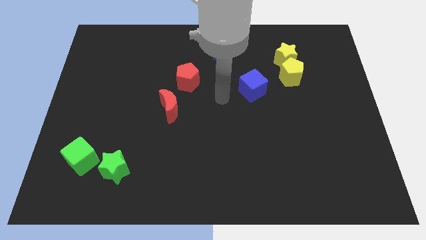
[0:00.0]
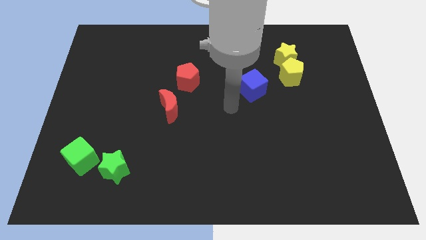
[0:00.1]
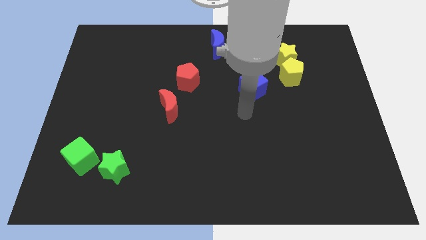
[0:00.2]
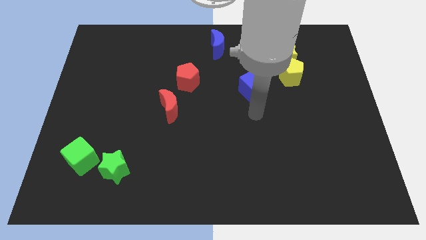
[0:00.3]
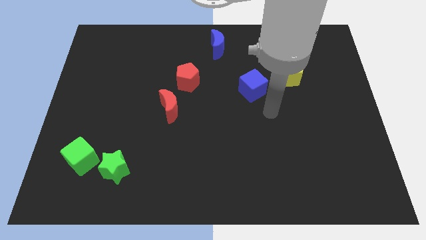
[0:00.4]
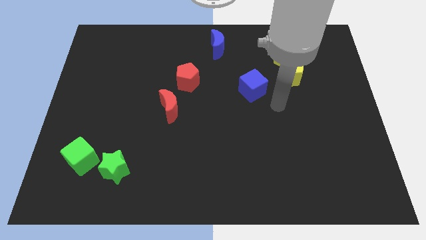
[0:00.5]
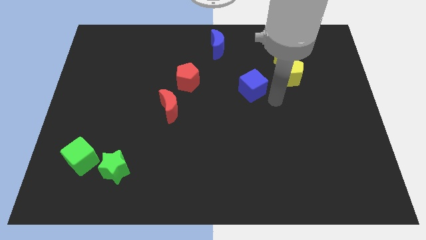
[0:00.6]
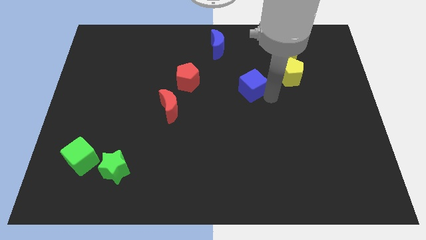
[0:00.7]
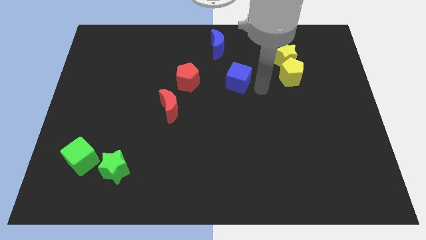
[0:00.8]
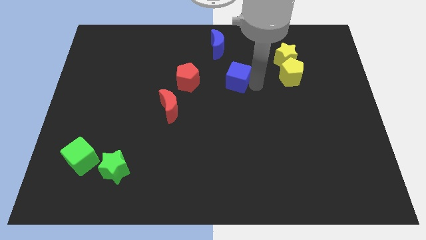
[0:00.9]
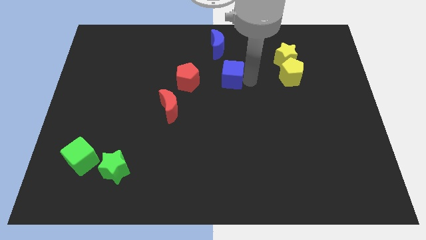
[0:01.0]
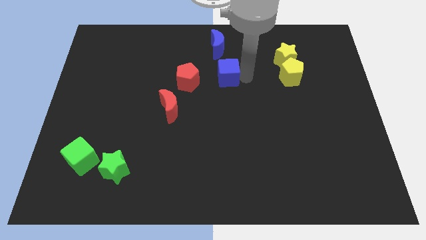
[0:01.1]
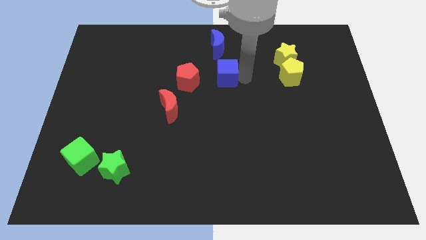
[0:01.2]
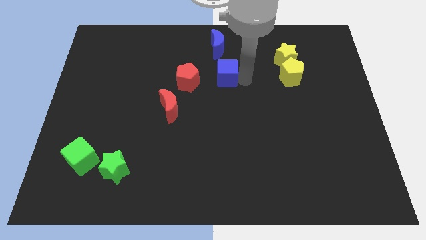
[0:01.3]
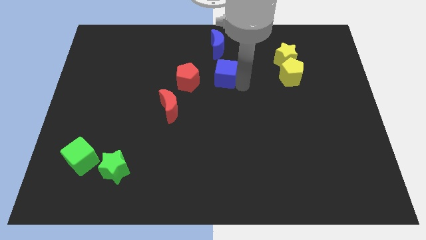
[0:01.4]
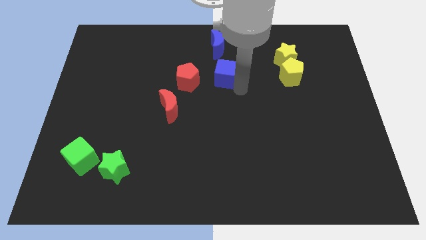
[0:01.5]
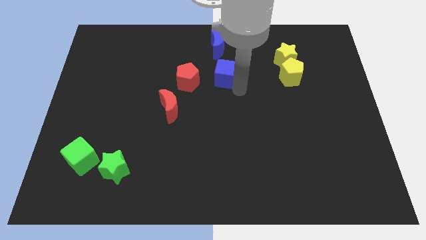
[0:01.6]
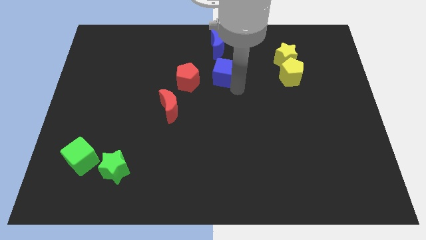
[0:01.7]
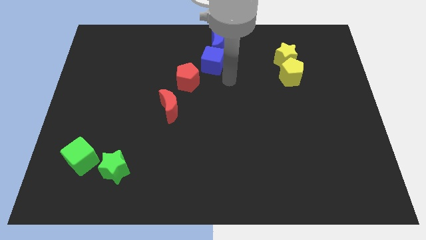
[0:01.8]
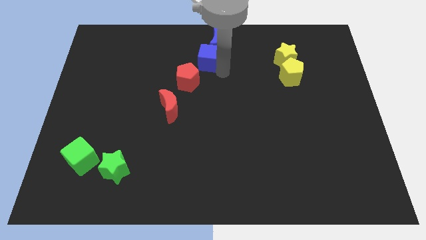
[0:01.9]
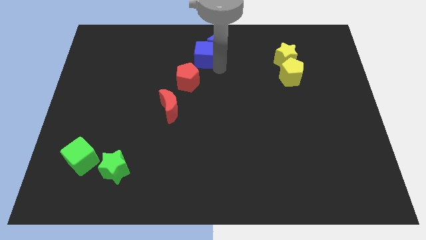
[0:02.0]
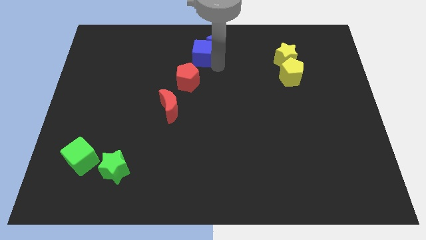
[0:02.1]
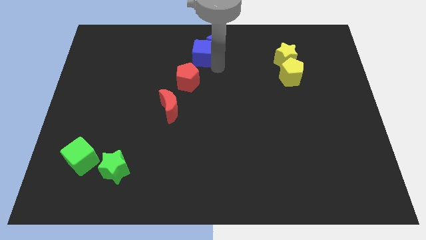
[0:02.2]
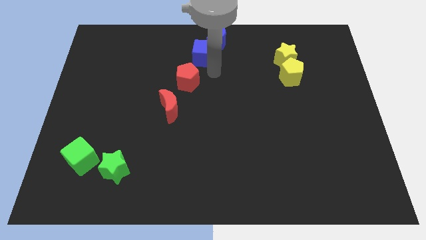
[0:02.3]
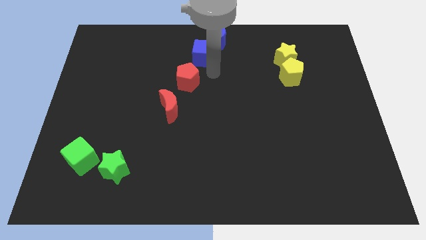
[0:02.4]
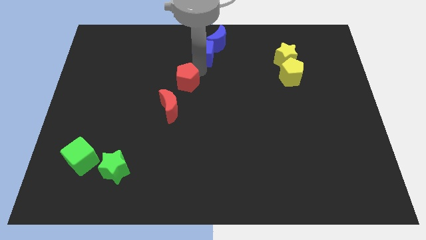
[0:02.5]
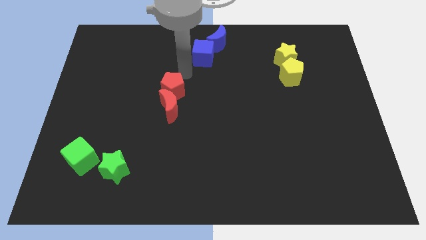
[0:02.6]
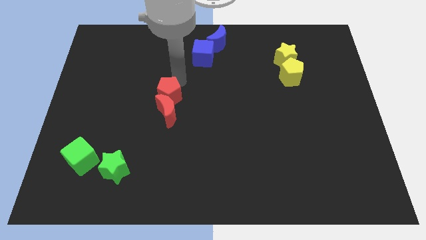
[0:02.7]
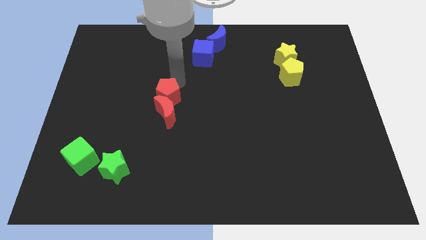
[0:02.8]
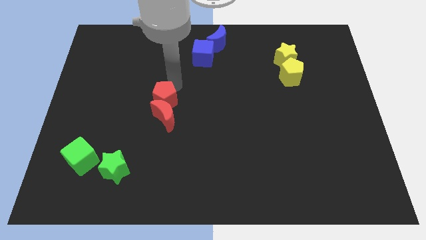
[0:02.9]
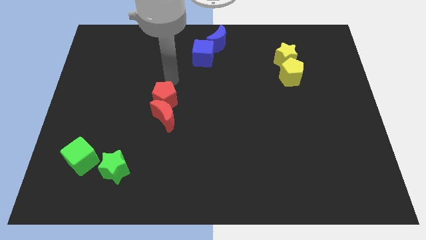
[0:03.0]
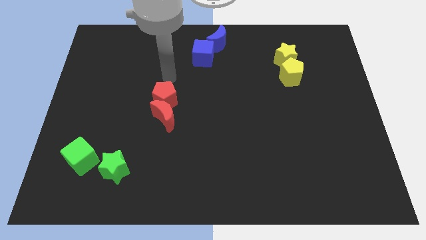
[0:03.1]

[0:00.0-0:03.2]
separate the red and blue blocks from each other

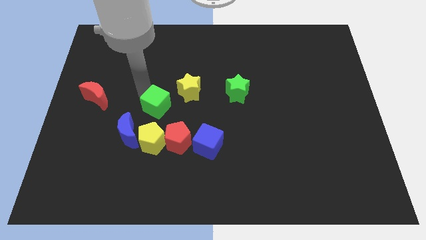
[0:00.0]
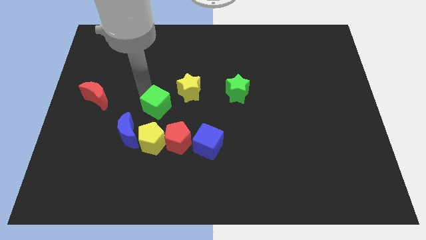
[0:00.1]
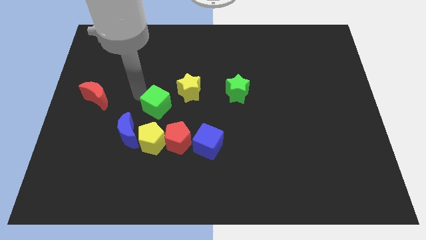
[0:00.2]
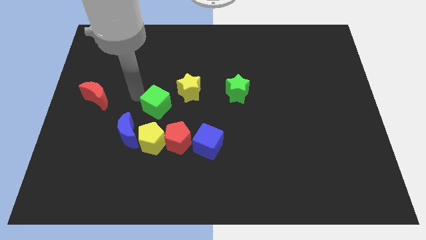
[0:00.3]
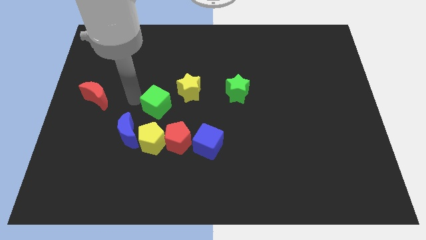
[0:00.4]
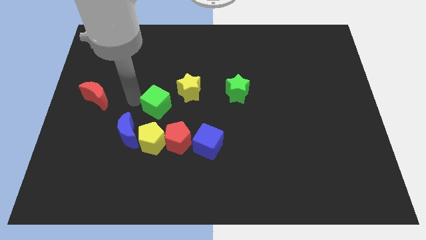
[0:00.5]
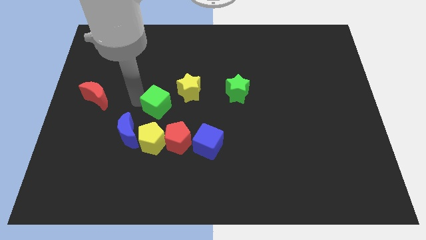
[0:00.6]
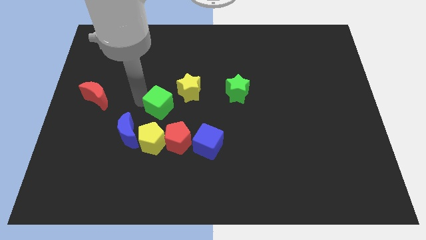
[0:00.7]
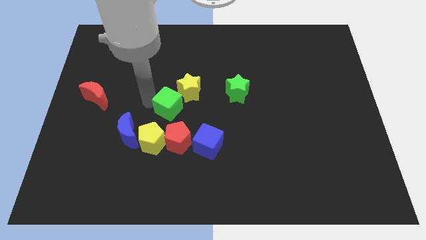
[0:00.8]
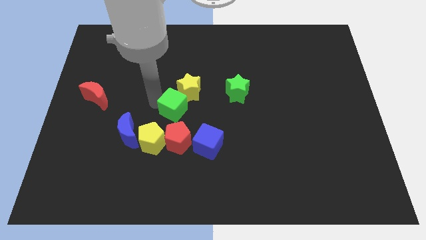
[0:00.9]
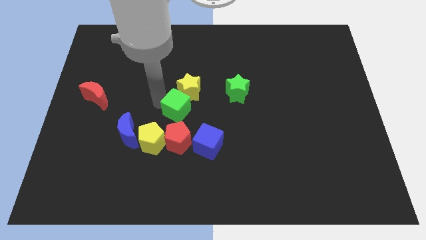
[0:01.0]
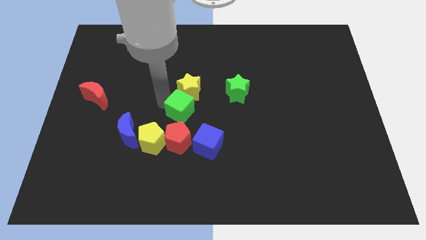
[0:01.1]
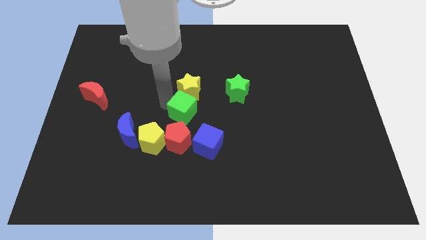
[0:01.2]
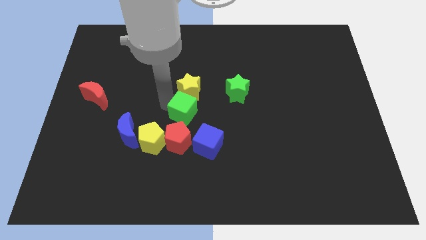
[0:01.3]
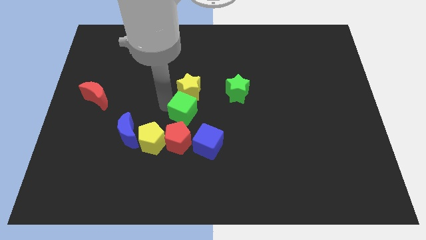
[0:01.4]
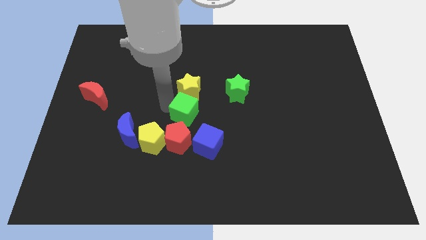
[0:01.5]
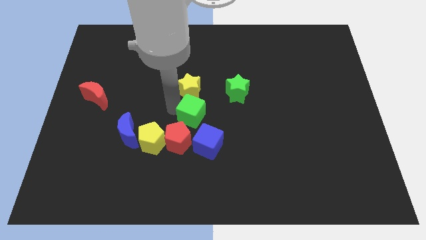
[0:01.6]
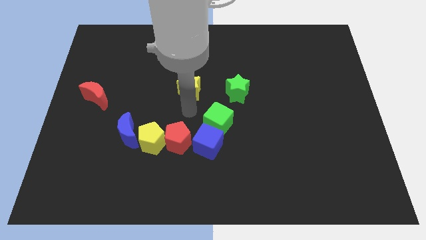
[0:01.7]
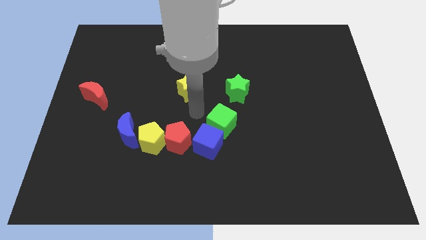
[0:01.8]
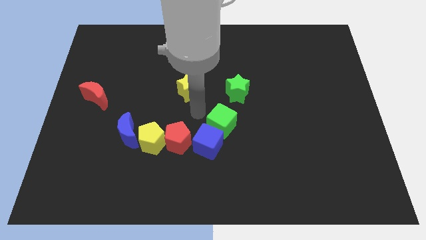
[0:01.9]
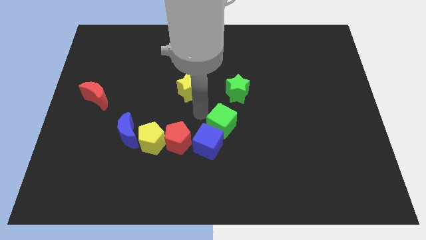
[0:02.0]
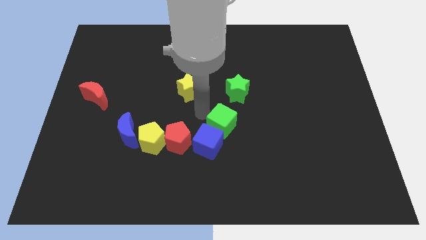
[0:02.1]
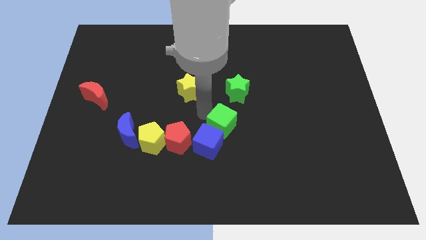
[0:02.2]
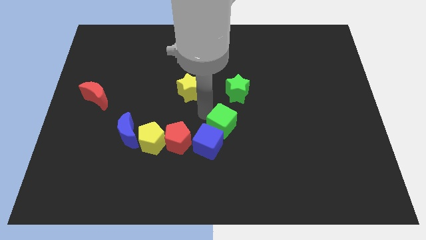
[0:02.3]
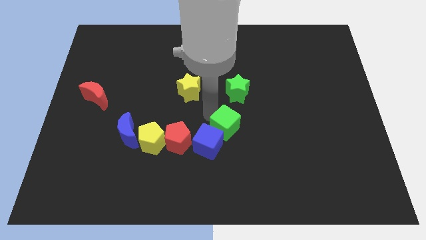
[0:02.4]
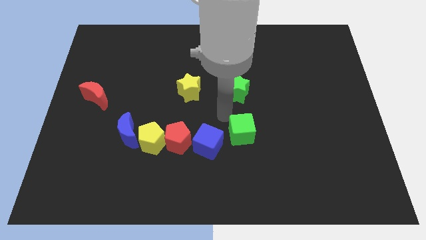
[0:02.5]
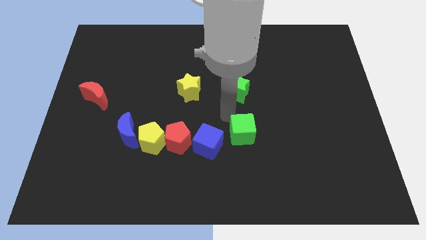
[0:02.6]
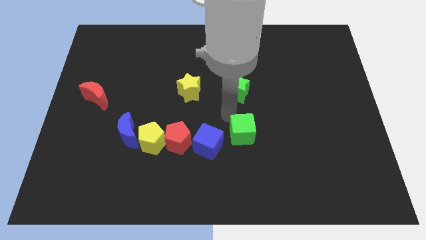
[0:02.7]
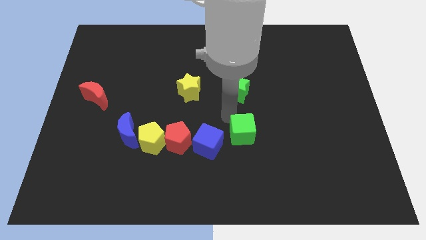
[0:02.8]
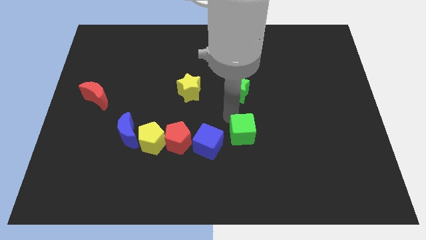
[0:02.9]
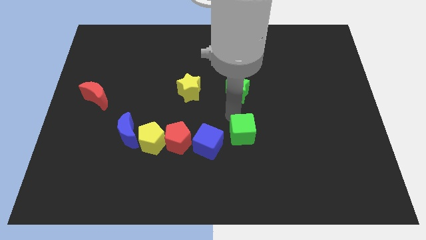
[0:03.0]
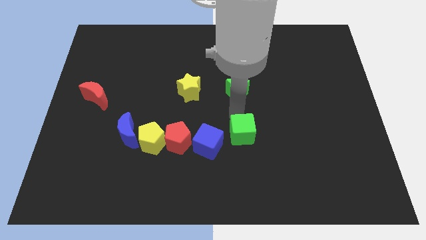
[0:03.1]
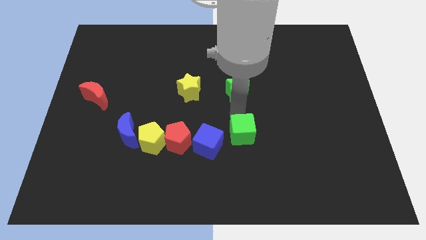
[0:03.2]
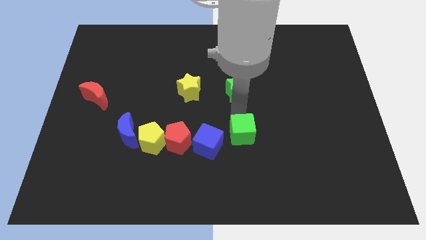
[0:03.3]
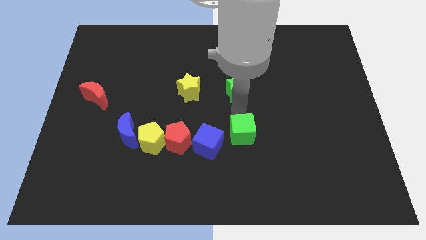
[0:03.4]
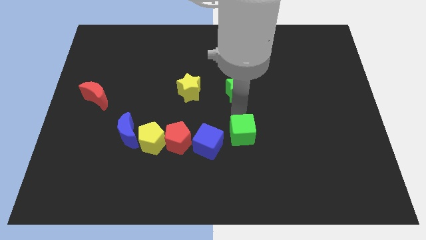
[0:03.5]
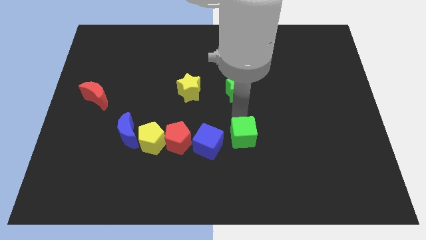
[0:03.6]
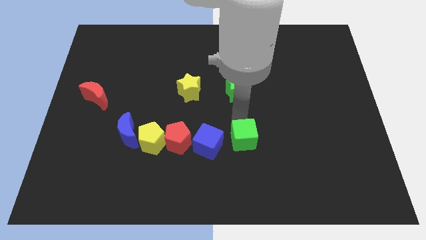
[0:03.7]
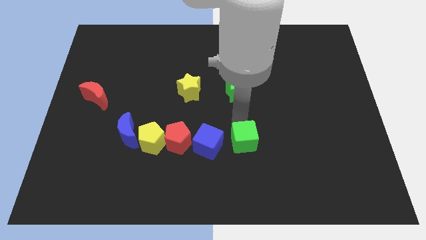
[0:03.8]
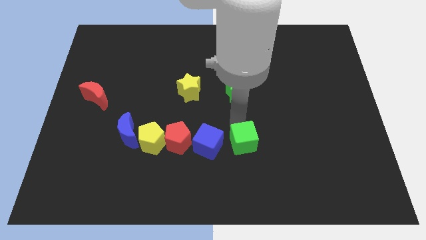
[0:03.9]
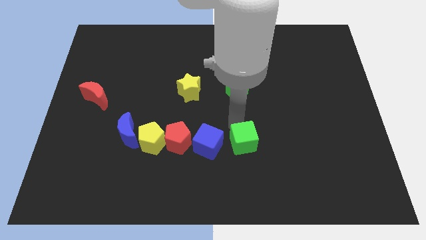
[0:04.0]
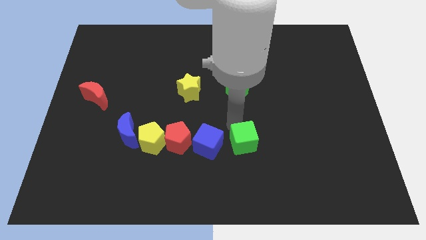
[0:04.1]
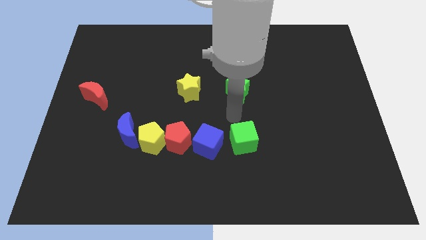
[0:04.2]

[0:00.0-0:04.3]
move the green cube right to the blue cube

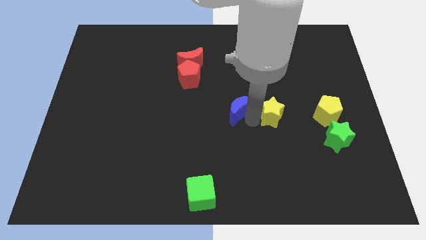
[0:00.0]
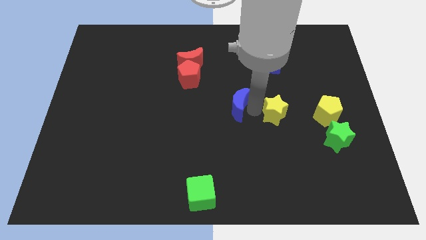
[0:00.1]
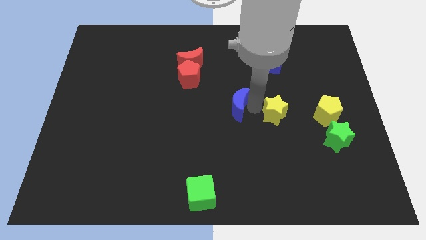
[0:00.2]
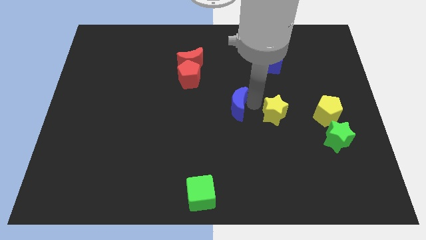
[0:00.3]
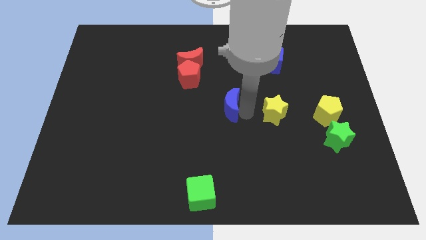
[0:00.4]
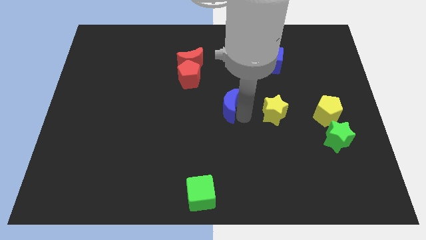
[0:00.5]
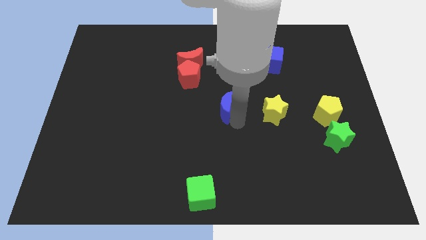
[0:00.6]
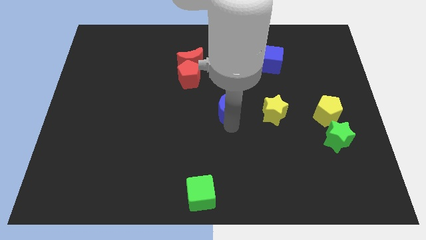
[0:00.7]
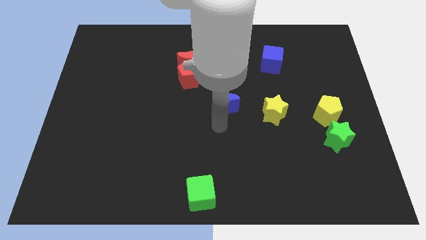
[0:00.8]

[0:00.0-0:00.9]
separate the blue moon from the yellow star

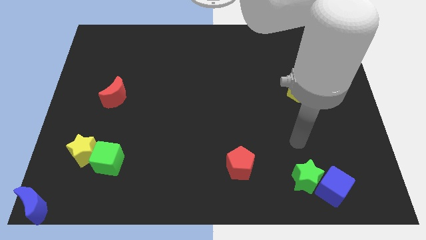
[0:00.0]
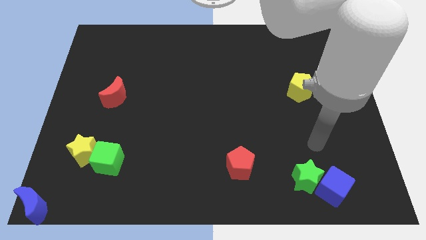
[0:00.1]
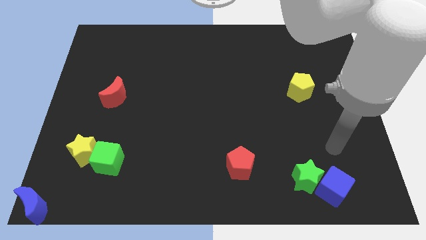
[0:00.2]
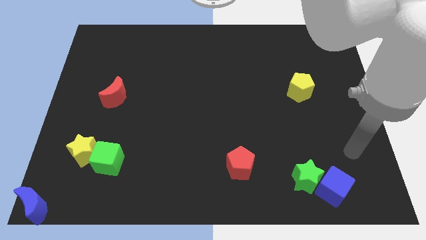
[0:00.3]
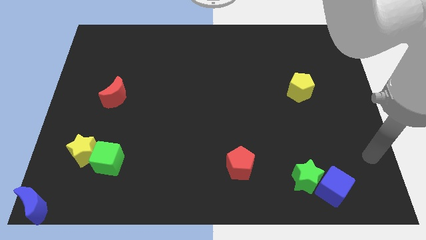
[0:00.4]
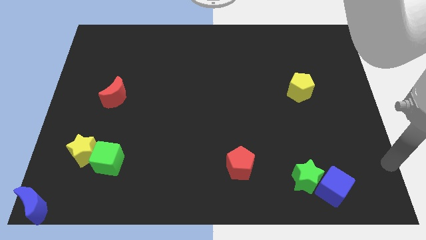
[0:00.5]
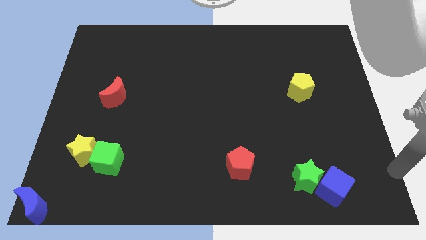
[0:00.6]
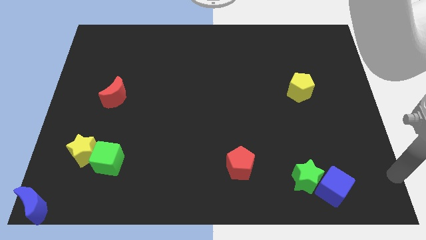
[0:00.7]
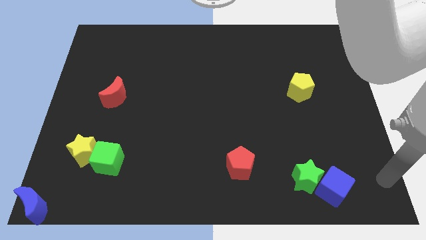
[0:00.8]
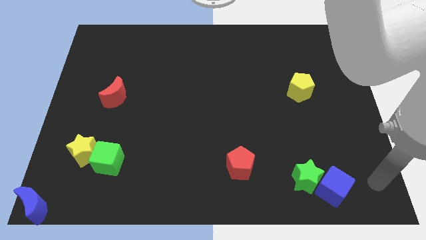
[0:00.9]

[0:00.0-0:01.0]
move your arm towards the bottom right side of the board
